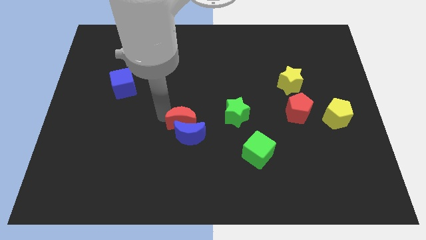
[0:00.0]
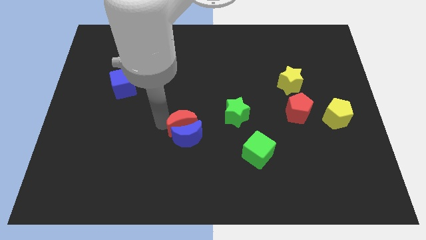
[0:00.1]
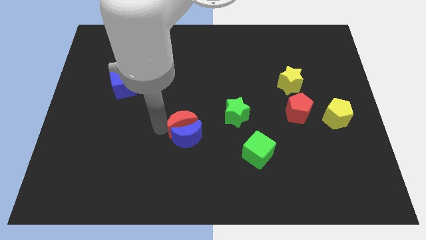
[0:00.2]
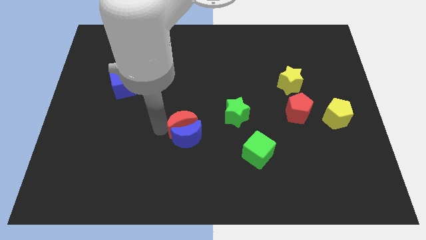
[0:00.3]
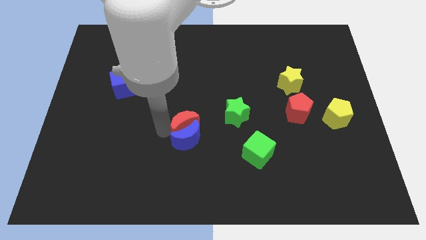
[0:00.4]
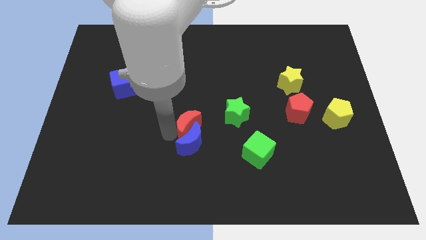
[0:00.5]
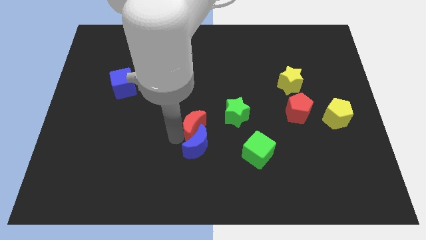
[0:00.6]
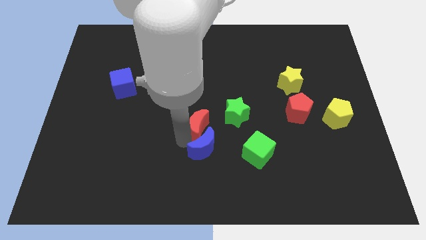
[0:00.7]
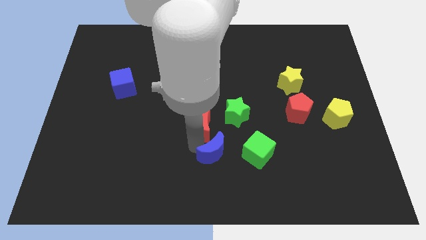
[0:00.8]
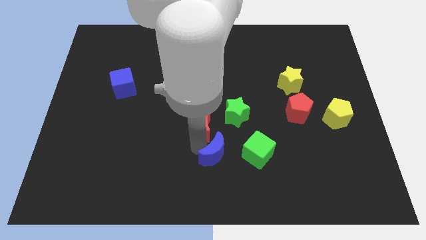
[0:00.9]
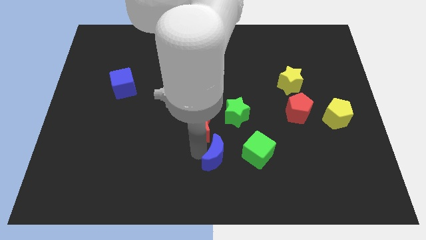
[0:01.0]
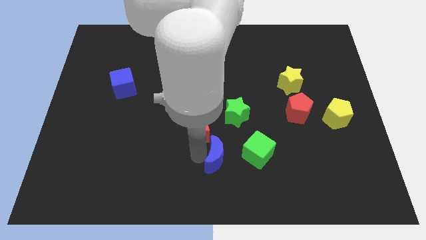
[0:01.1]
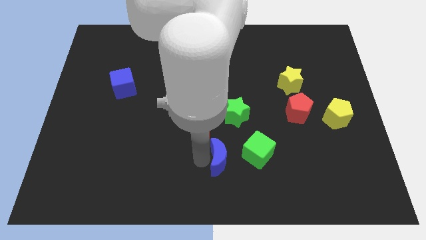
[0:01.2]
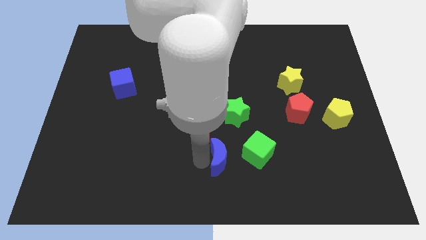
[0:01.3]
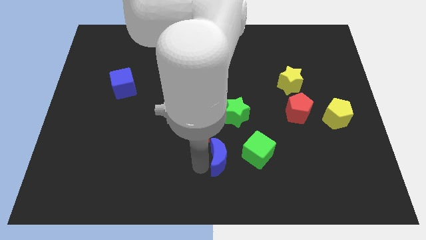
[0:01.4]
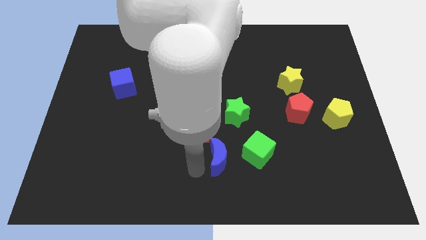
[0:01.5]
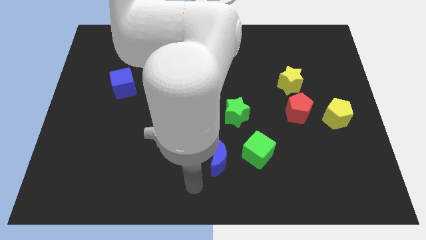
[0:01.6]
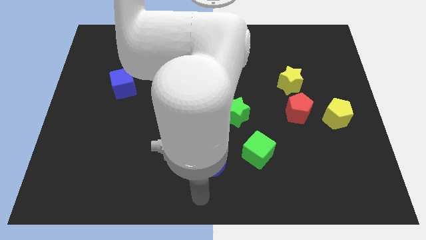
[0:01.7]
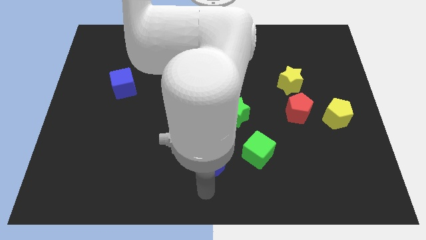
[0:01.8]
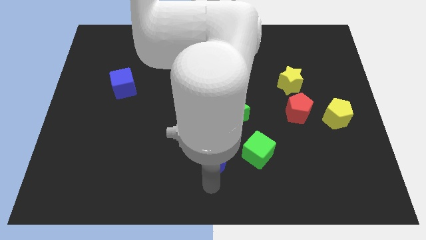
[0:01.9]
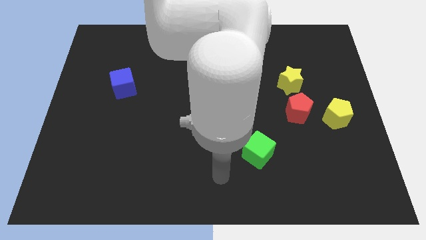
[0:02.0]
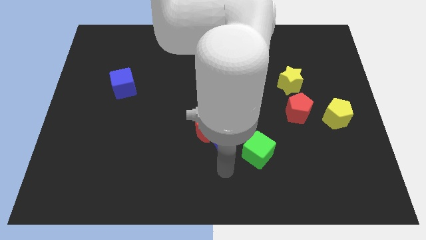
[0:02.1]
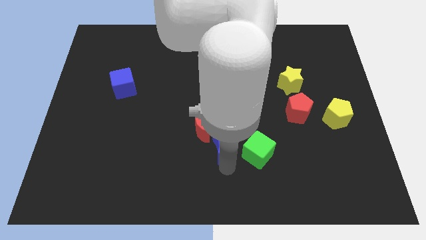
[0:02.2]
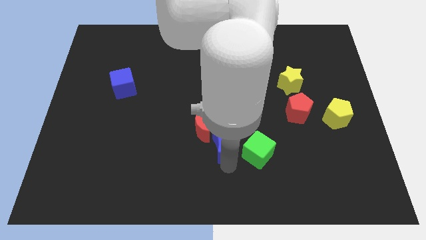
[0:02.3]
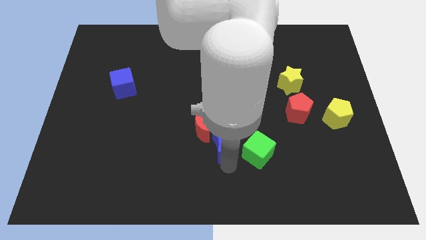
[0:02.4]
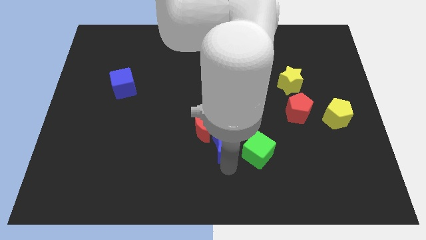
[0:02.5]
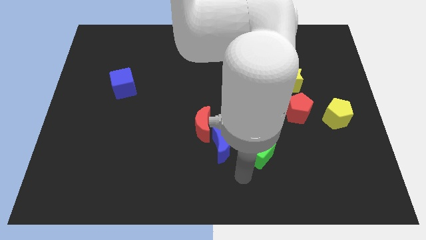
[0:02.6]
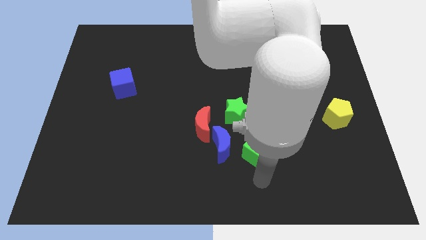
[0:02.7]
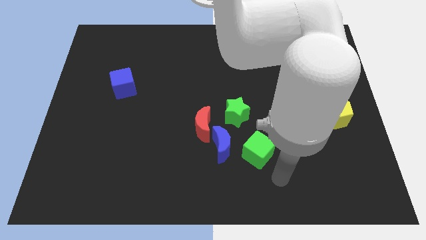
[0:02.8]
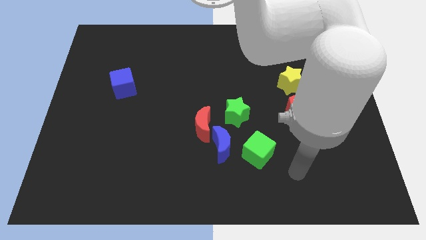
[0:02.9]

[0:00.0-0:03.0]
slightly push down the blue moon

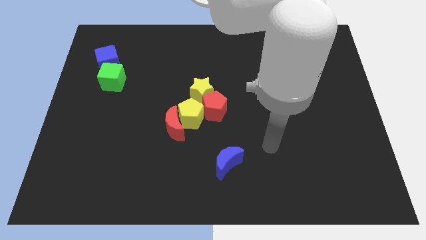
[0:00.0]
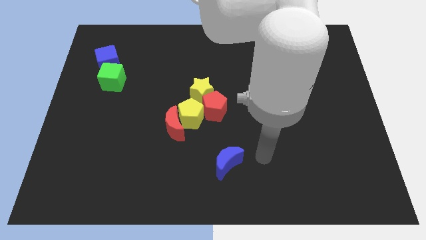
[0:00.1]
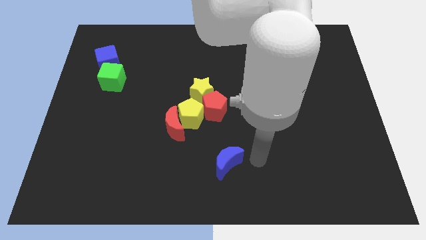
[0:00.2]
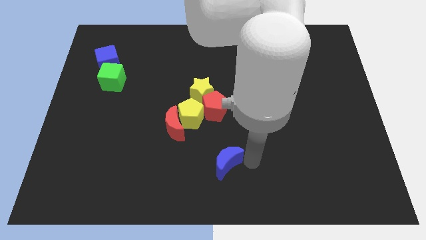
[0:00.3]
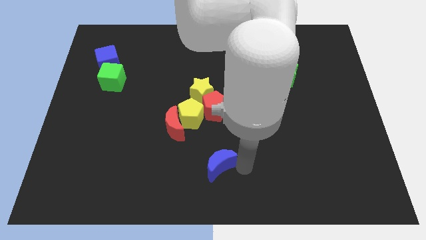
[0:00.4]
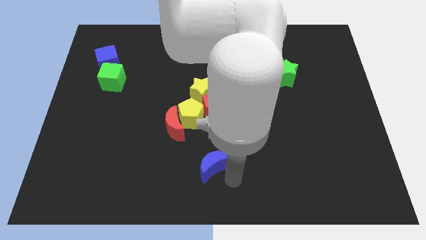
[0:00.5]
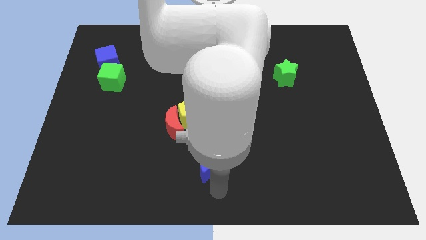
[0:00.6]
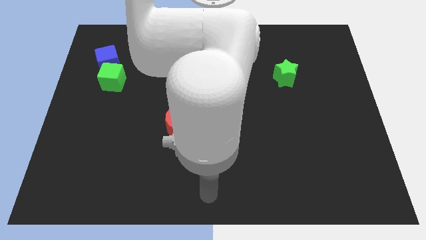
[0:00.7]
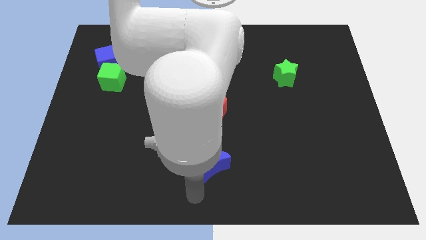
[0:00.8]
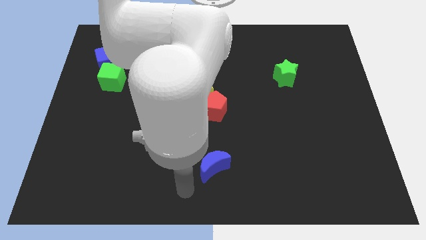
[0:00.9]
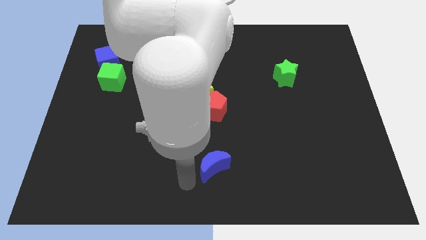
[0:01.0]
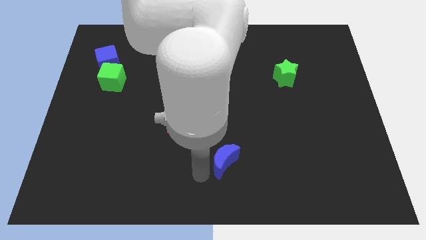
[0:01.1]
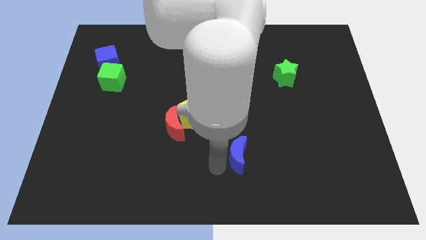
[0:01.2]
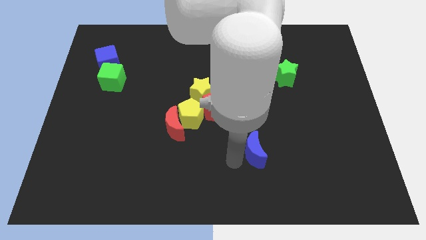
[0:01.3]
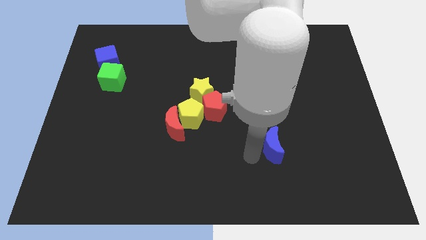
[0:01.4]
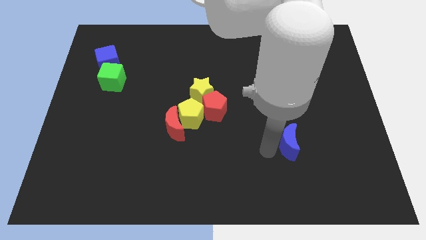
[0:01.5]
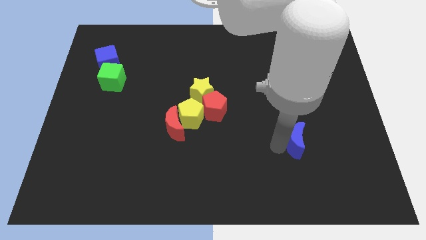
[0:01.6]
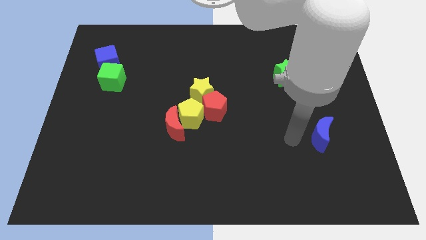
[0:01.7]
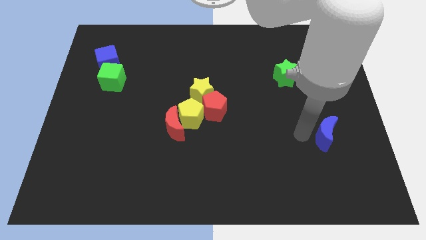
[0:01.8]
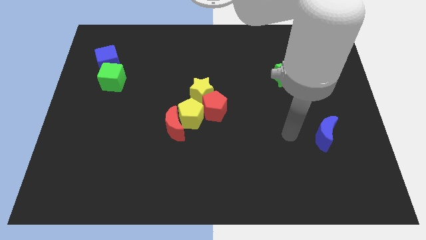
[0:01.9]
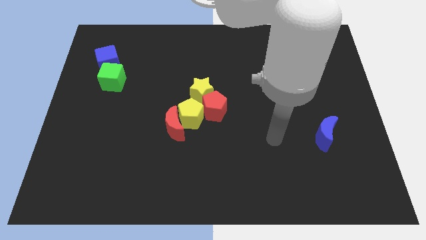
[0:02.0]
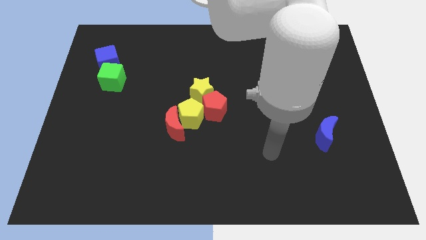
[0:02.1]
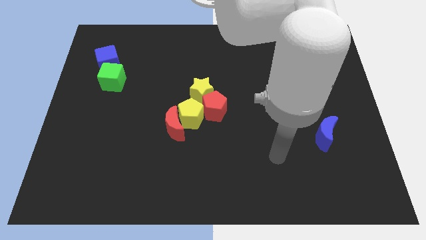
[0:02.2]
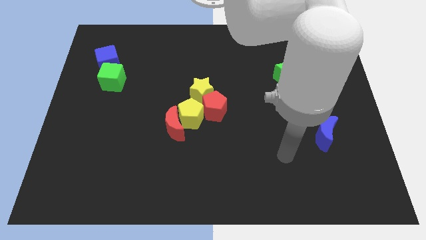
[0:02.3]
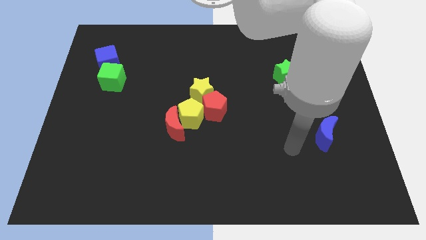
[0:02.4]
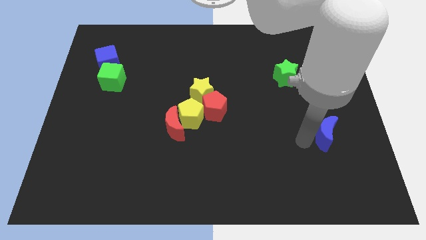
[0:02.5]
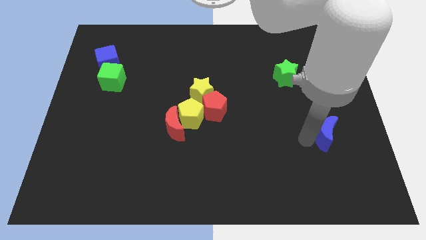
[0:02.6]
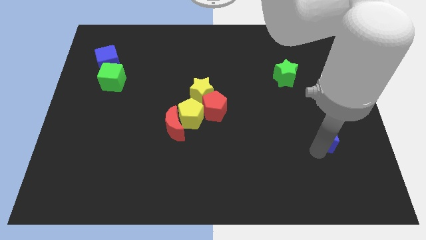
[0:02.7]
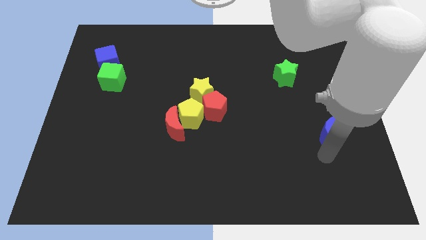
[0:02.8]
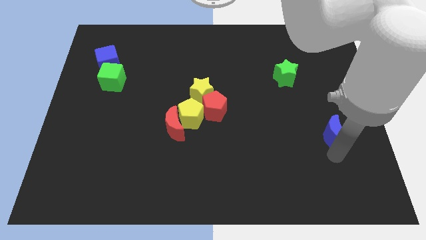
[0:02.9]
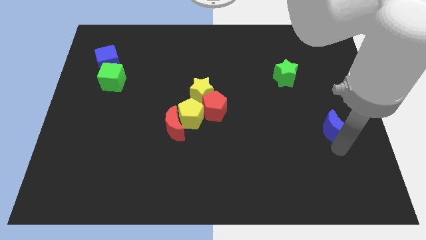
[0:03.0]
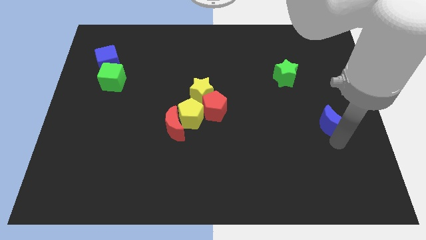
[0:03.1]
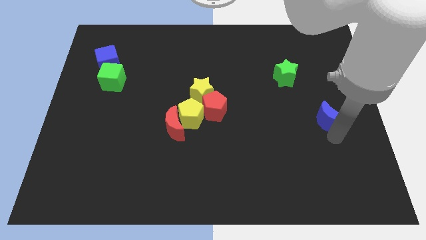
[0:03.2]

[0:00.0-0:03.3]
push the blue moon to the right center of the board

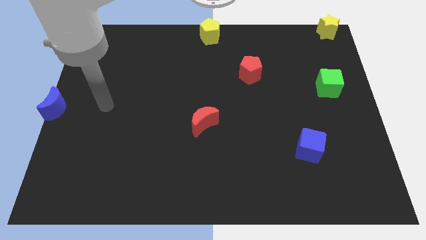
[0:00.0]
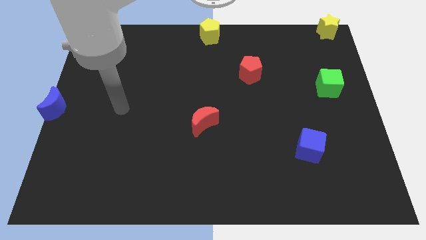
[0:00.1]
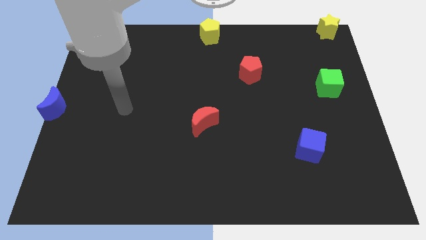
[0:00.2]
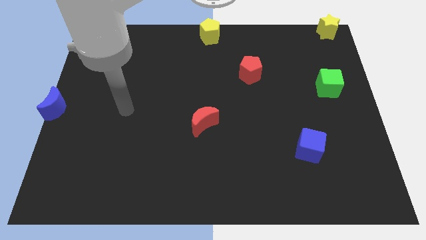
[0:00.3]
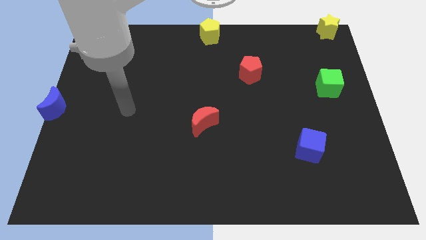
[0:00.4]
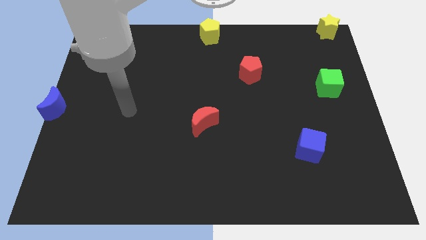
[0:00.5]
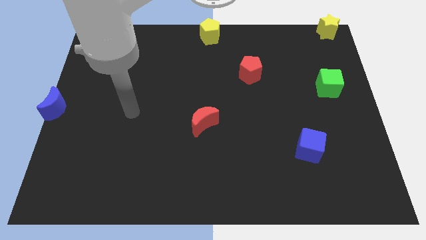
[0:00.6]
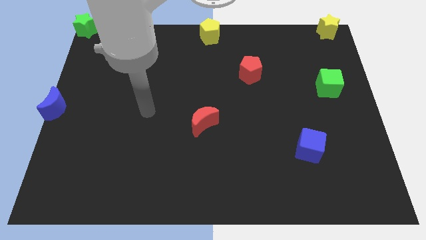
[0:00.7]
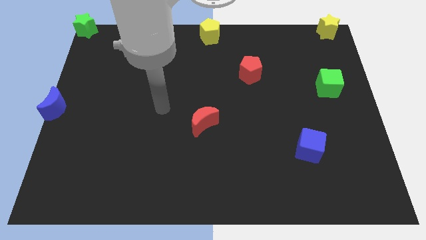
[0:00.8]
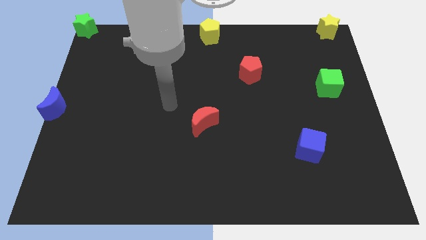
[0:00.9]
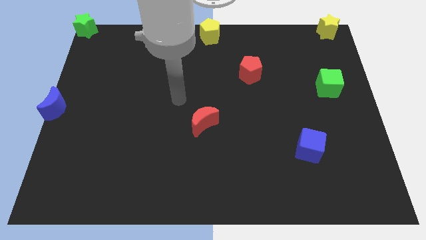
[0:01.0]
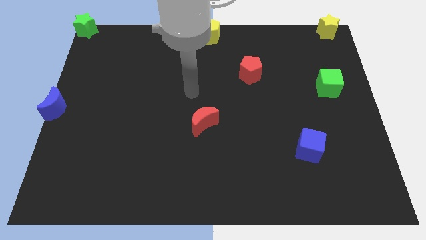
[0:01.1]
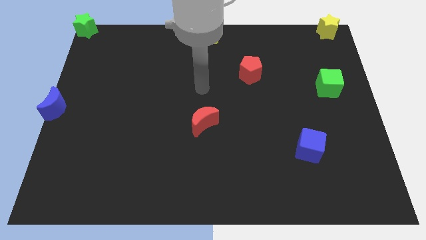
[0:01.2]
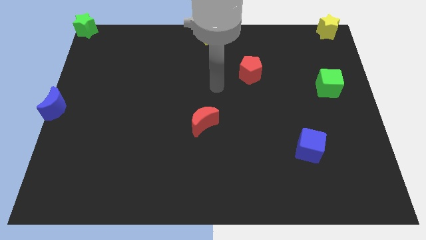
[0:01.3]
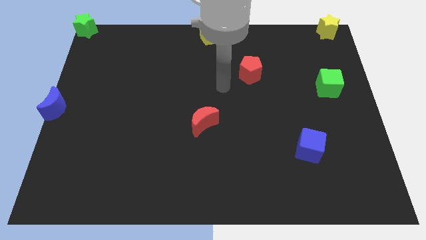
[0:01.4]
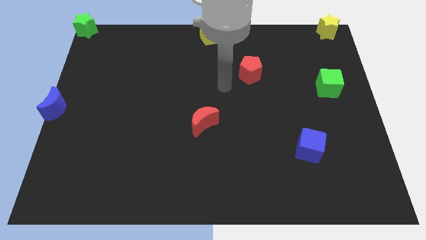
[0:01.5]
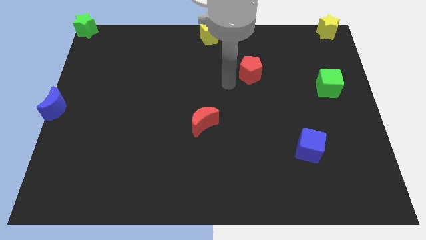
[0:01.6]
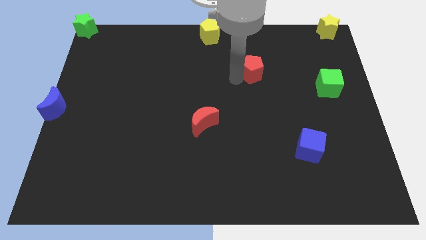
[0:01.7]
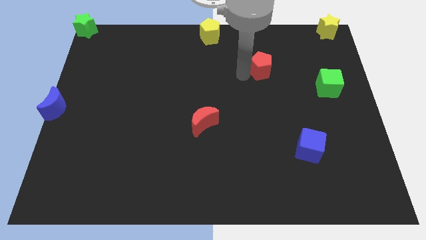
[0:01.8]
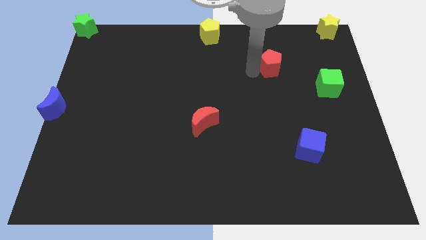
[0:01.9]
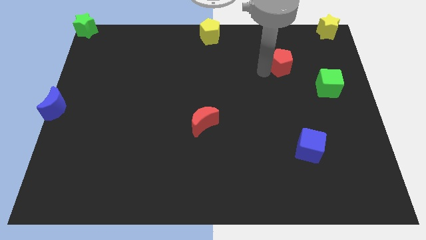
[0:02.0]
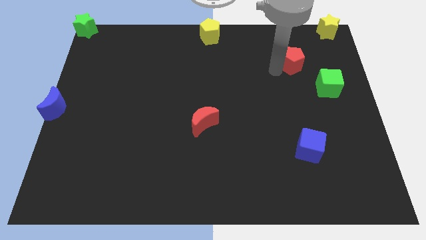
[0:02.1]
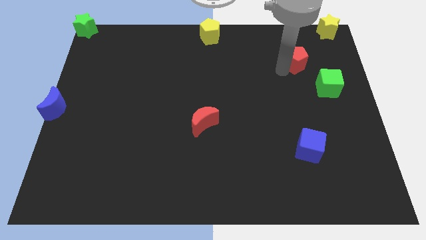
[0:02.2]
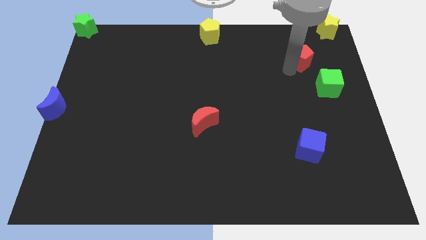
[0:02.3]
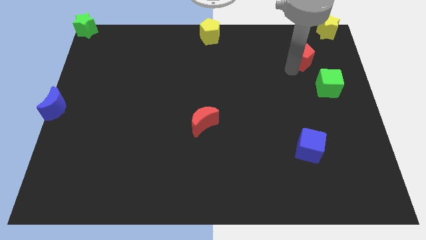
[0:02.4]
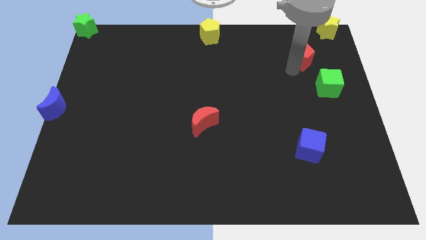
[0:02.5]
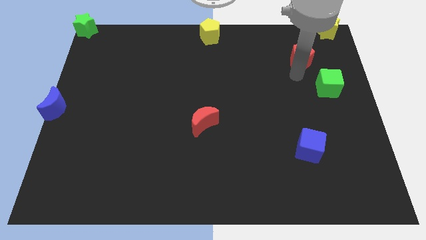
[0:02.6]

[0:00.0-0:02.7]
move the red pentagon near the green cube
